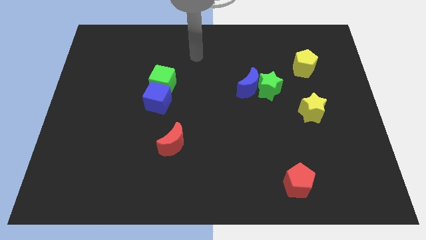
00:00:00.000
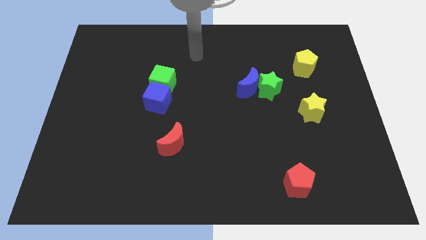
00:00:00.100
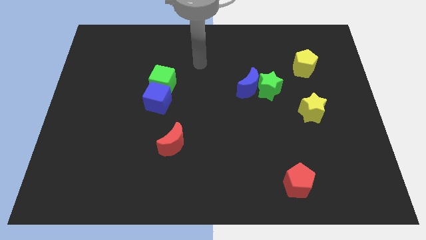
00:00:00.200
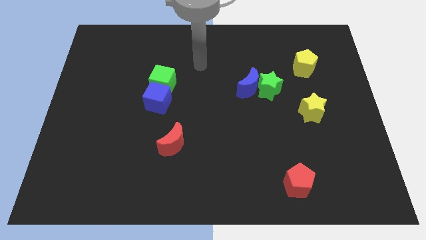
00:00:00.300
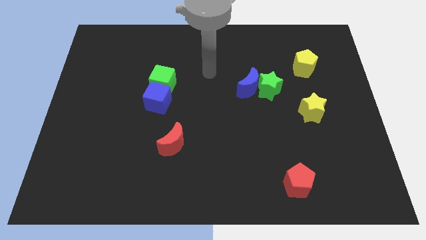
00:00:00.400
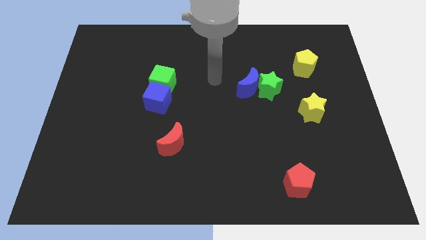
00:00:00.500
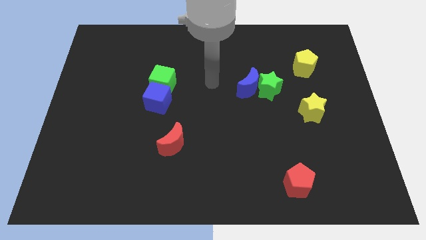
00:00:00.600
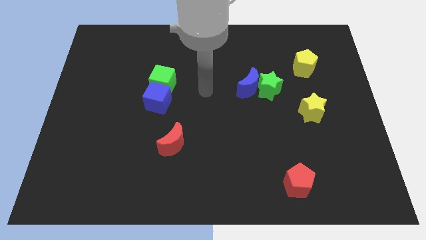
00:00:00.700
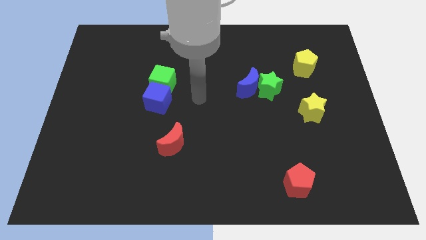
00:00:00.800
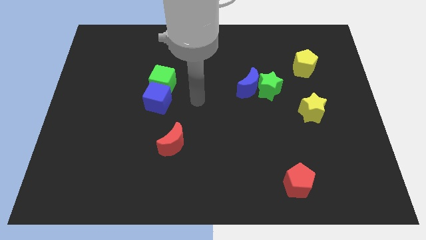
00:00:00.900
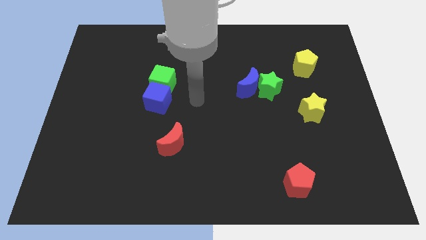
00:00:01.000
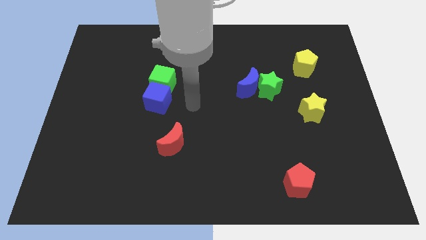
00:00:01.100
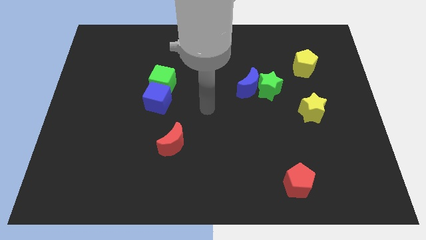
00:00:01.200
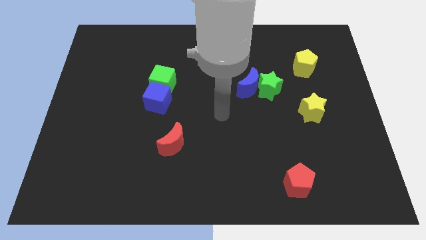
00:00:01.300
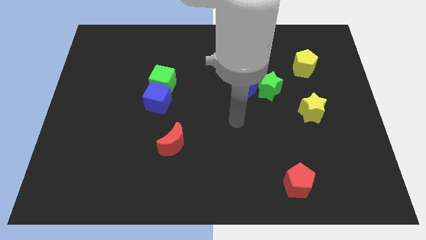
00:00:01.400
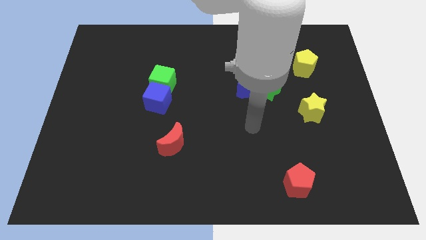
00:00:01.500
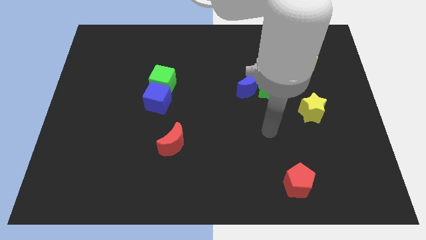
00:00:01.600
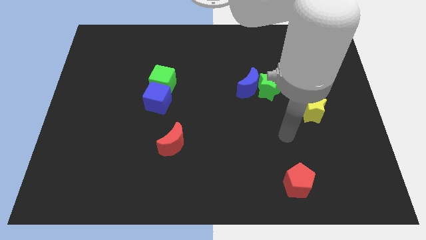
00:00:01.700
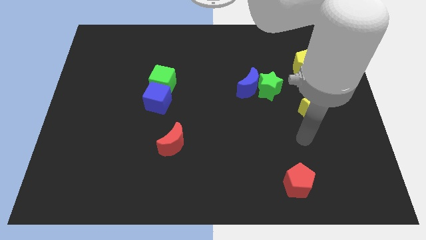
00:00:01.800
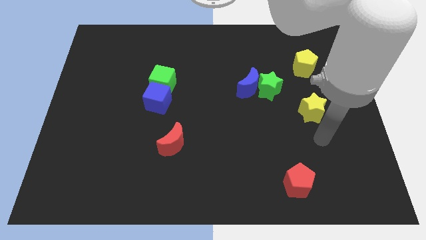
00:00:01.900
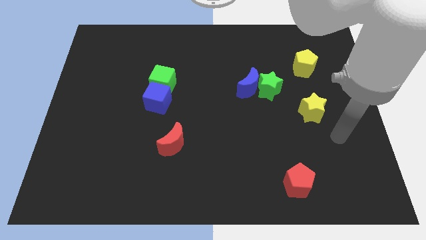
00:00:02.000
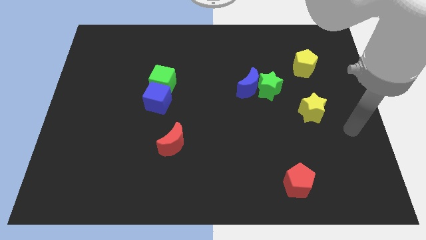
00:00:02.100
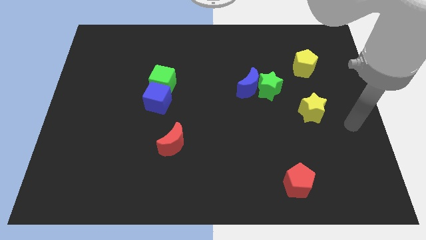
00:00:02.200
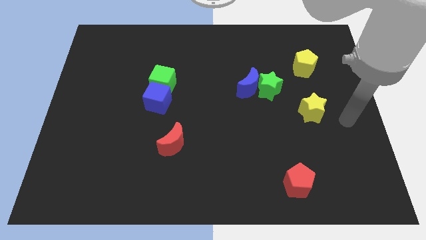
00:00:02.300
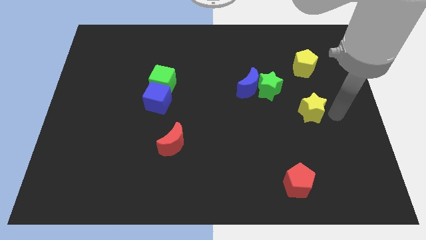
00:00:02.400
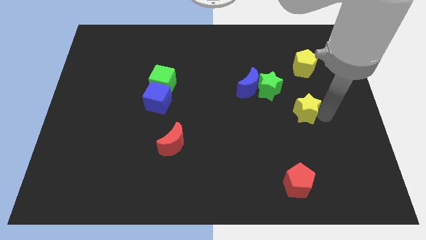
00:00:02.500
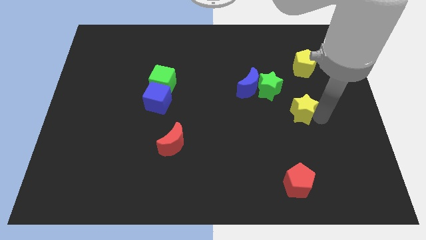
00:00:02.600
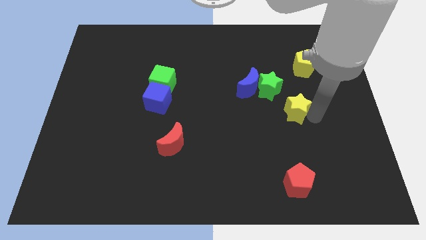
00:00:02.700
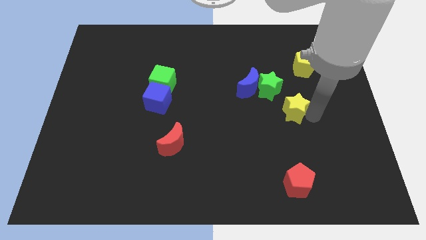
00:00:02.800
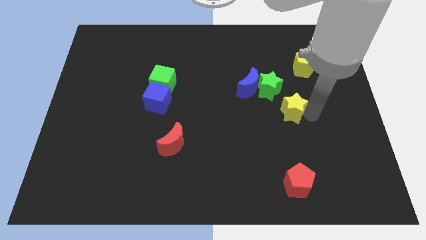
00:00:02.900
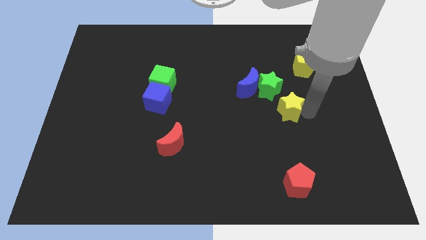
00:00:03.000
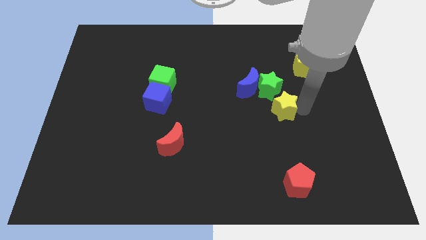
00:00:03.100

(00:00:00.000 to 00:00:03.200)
push yellow star above red pentagon

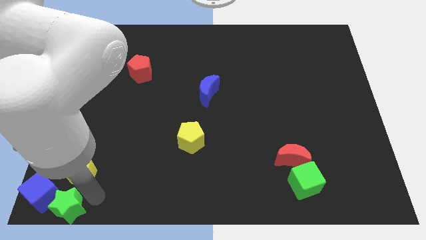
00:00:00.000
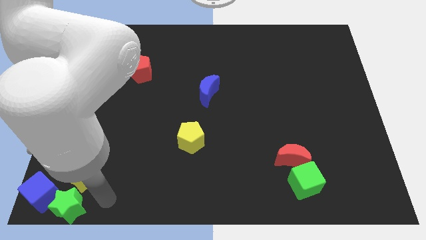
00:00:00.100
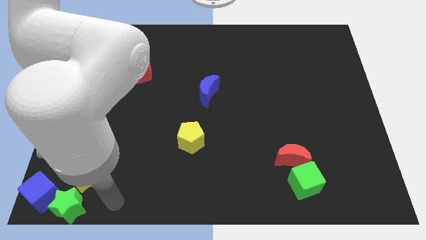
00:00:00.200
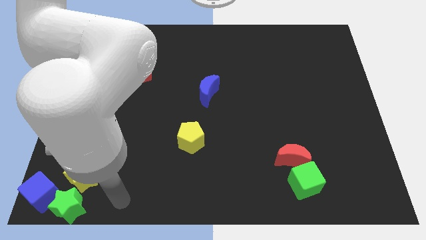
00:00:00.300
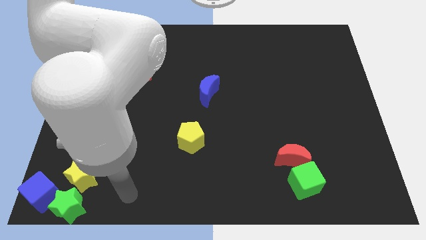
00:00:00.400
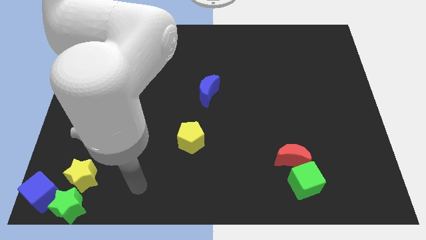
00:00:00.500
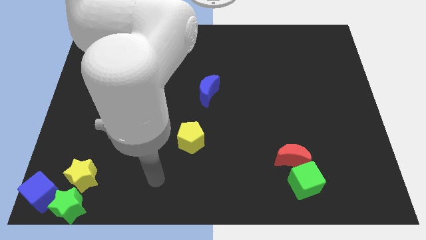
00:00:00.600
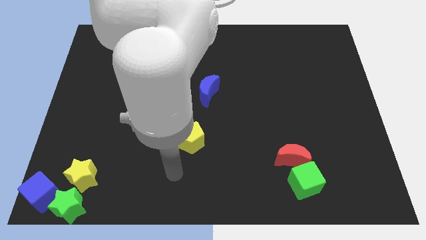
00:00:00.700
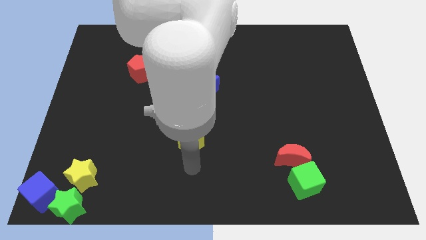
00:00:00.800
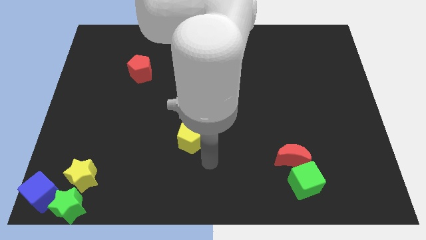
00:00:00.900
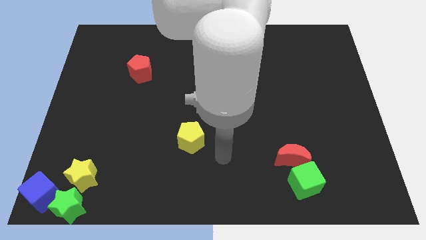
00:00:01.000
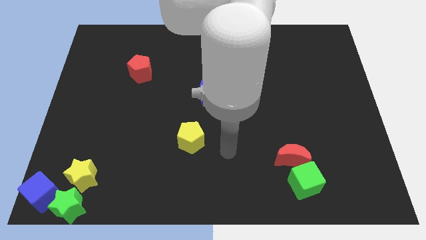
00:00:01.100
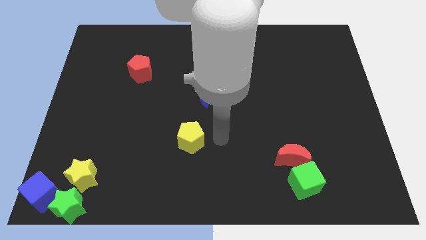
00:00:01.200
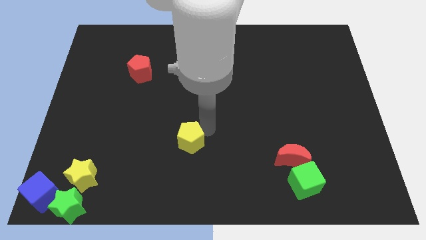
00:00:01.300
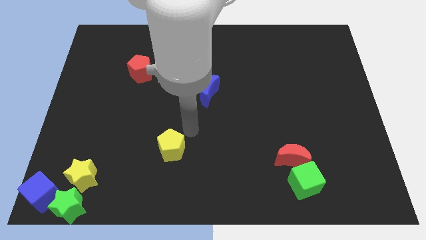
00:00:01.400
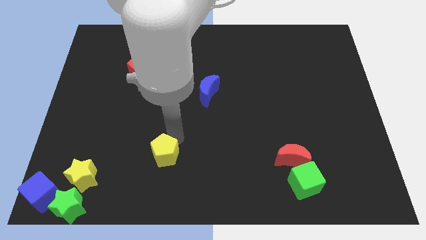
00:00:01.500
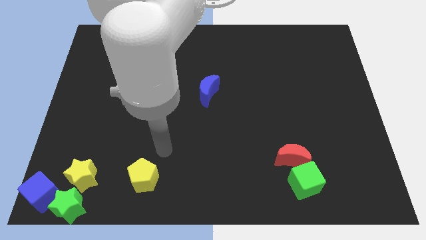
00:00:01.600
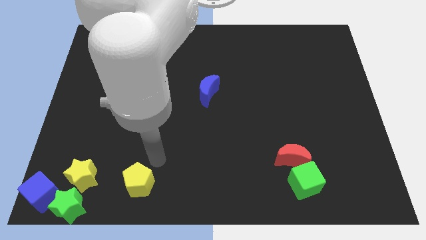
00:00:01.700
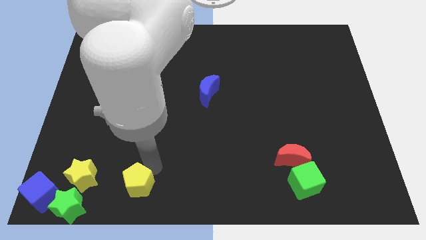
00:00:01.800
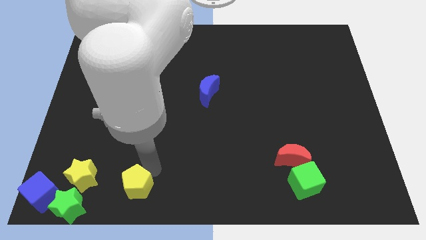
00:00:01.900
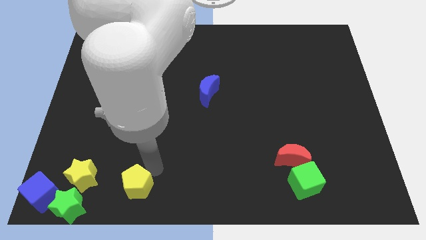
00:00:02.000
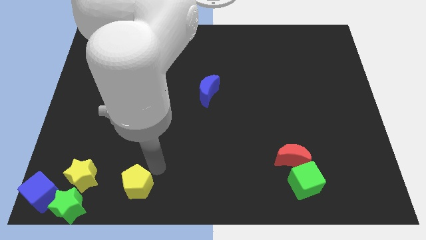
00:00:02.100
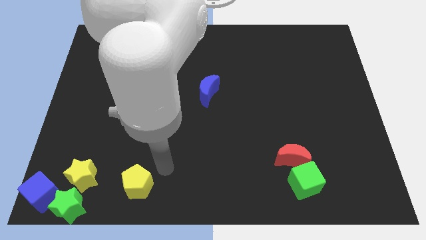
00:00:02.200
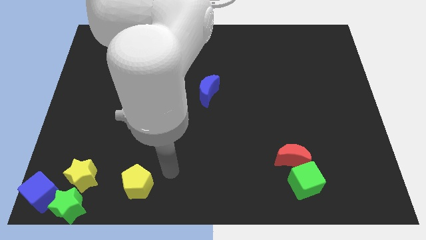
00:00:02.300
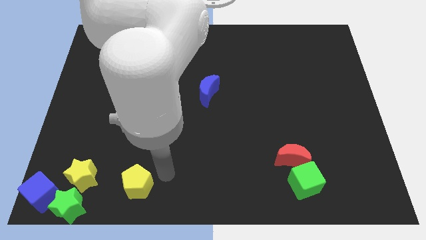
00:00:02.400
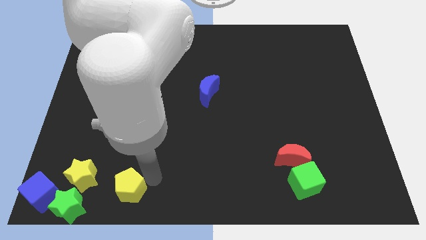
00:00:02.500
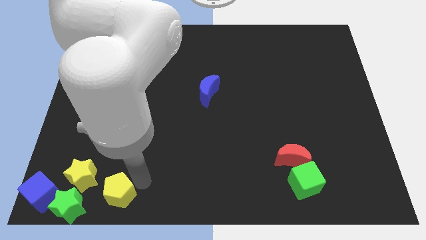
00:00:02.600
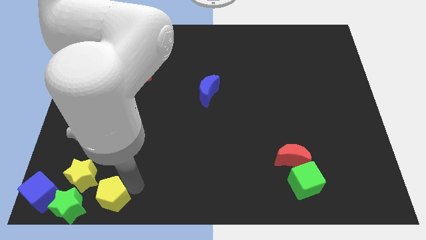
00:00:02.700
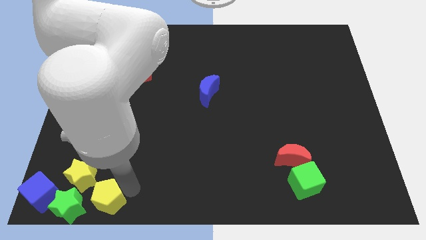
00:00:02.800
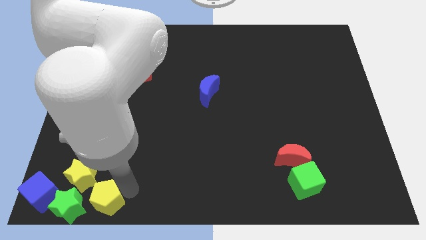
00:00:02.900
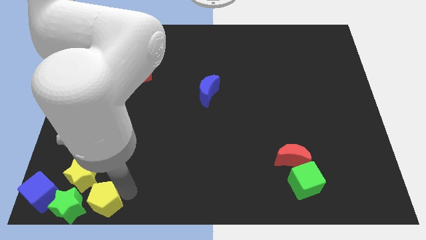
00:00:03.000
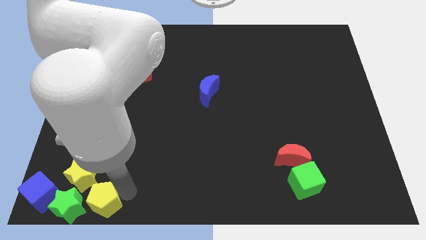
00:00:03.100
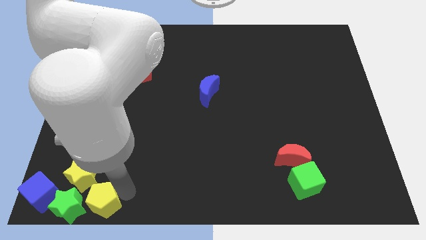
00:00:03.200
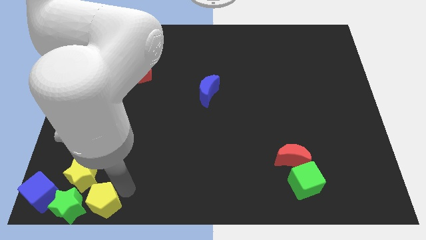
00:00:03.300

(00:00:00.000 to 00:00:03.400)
move the yellow pentagon to the right of the green star

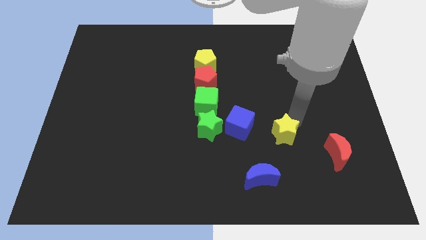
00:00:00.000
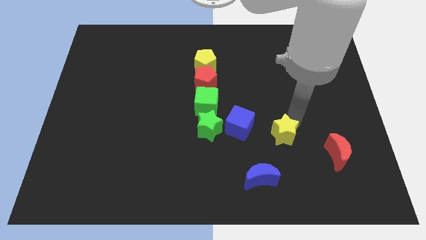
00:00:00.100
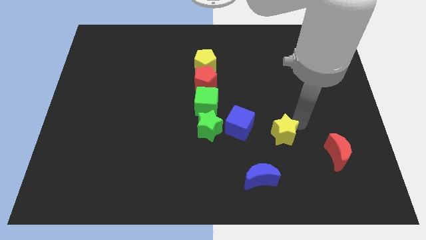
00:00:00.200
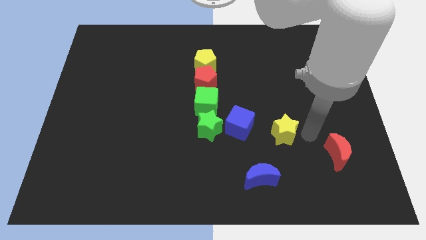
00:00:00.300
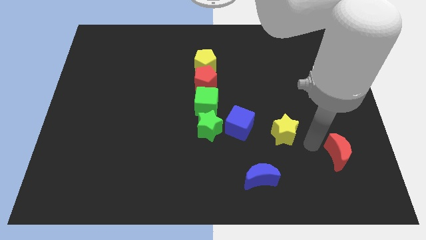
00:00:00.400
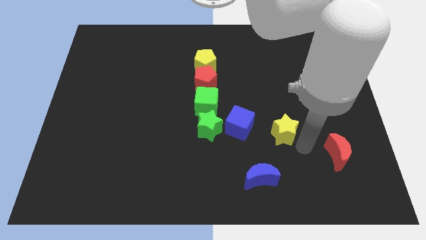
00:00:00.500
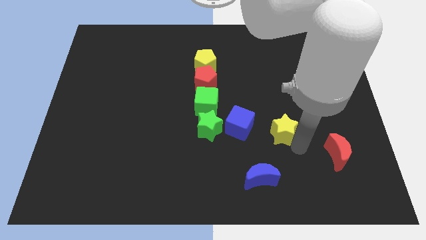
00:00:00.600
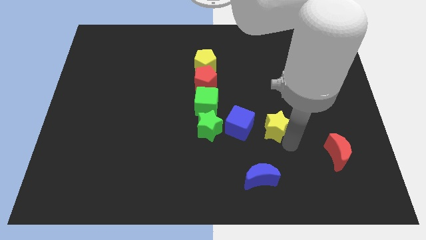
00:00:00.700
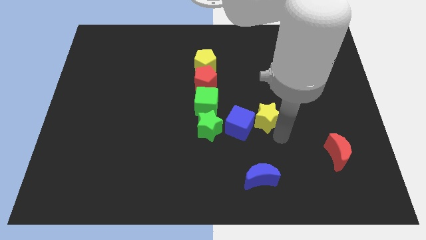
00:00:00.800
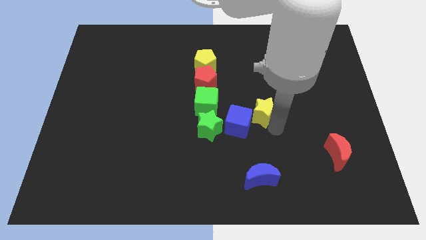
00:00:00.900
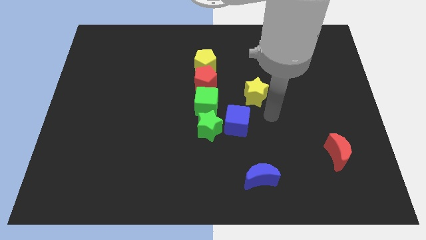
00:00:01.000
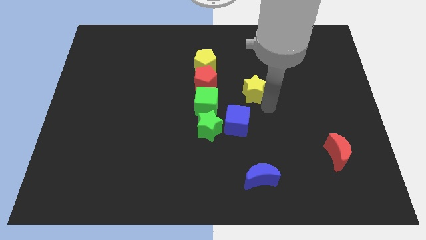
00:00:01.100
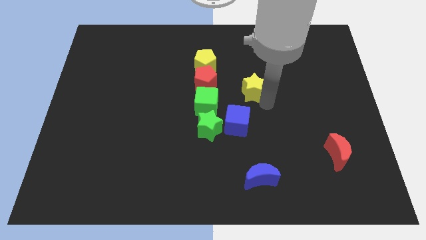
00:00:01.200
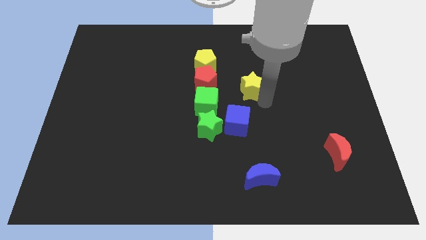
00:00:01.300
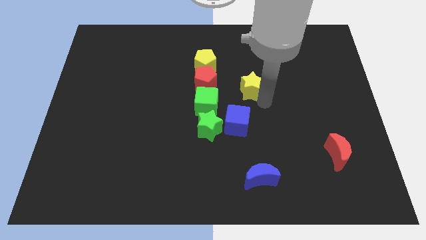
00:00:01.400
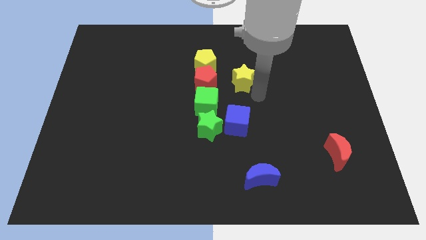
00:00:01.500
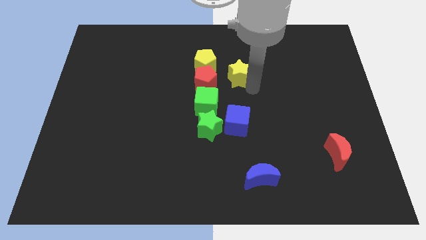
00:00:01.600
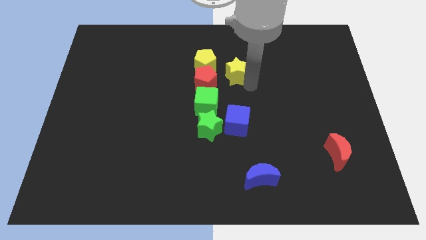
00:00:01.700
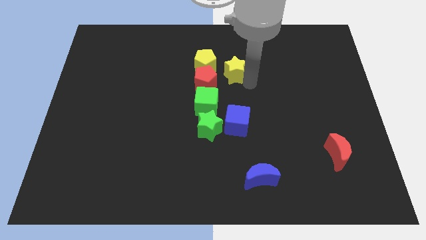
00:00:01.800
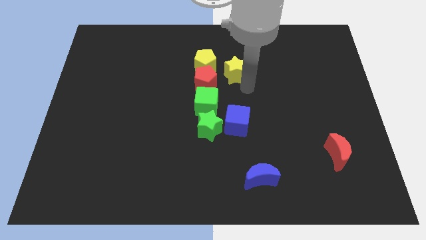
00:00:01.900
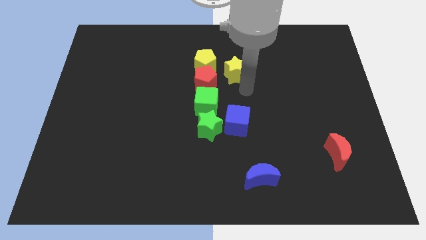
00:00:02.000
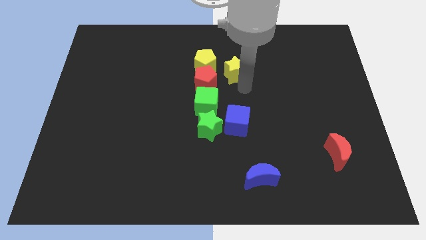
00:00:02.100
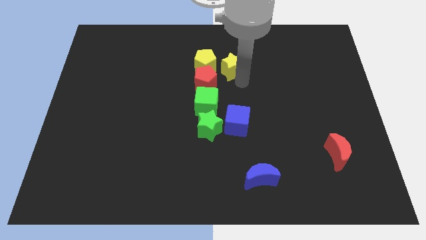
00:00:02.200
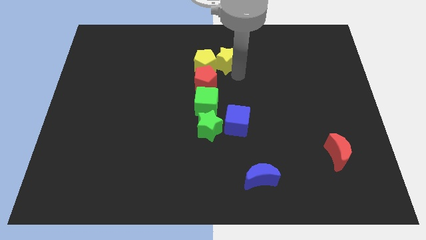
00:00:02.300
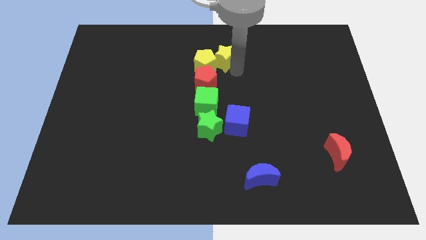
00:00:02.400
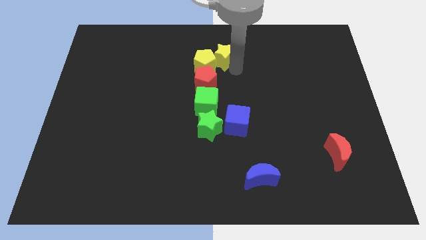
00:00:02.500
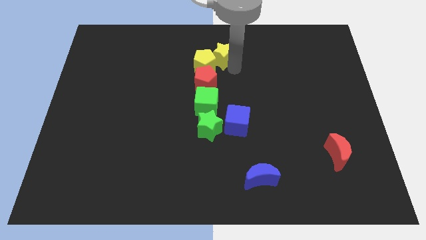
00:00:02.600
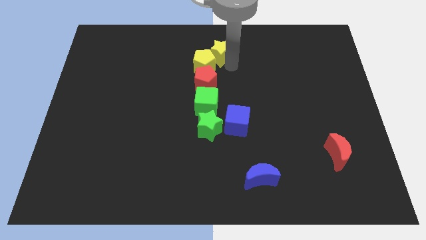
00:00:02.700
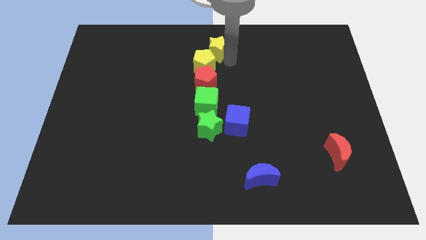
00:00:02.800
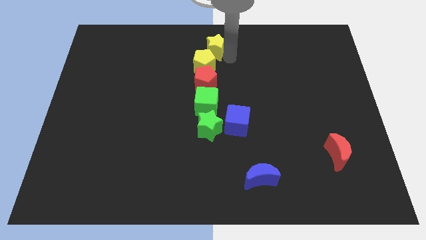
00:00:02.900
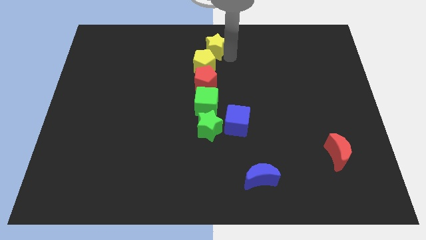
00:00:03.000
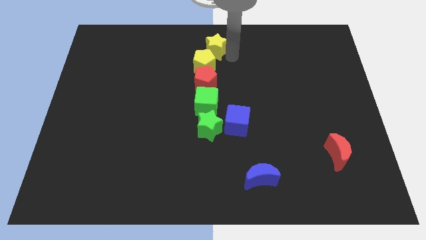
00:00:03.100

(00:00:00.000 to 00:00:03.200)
slide the yellow star diagonally top right to the yellow pentagon
